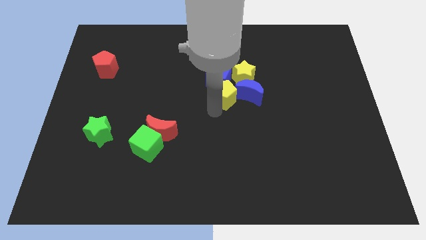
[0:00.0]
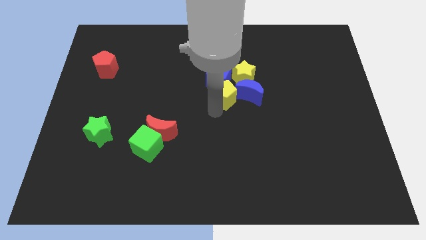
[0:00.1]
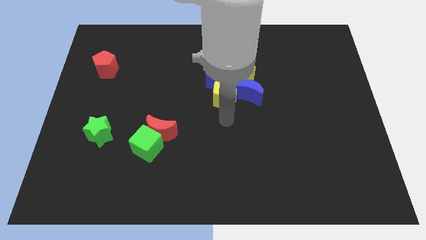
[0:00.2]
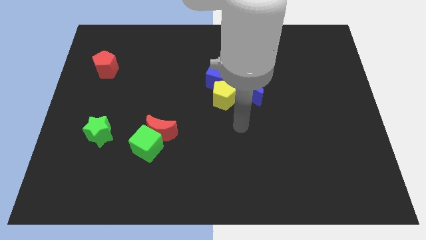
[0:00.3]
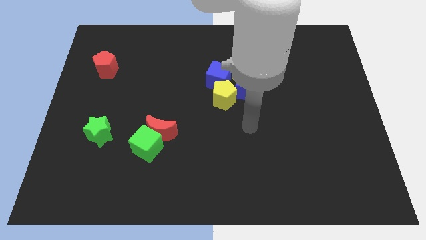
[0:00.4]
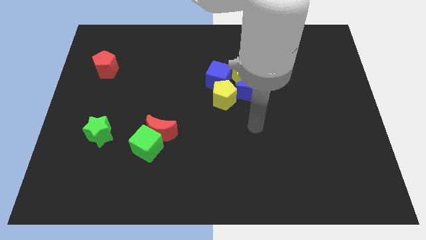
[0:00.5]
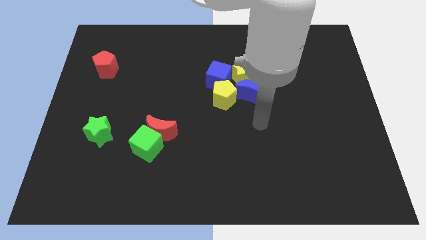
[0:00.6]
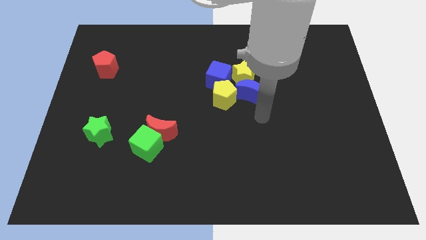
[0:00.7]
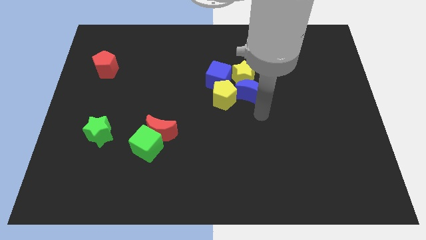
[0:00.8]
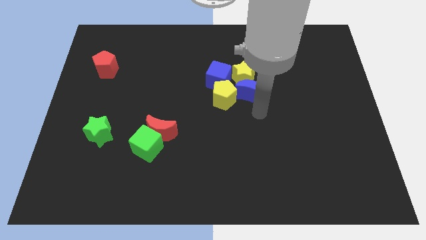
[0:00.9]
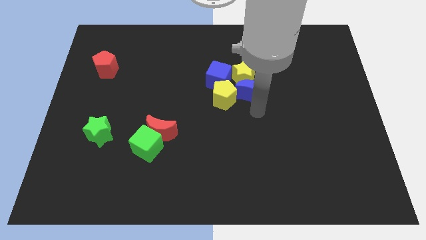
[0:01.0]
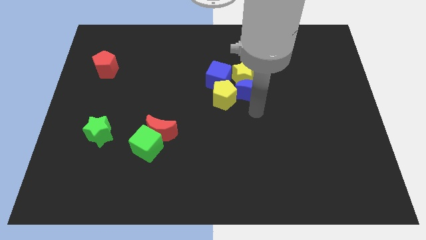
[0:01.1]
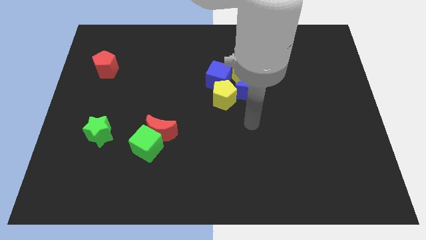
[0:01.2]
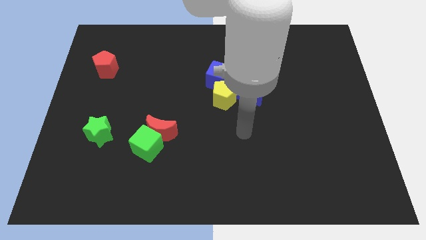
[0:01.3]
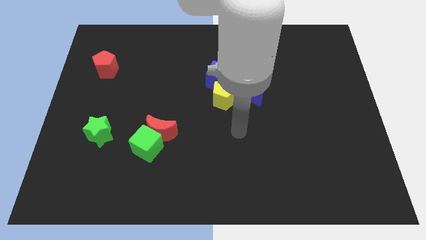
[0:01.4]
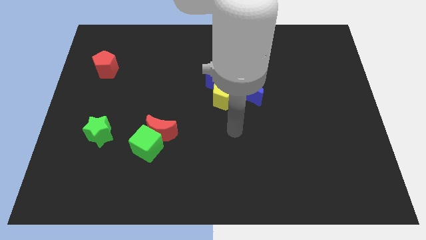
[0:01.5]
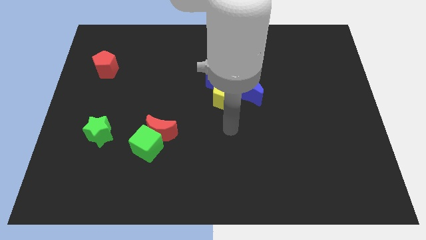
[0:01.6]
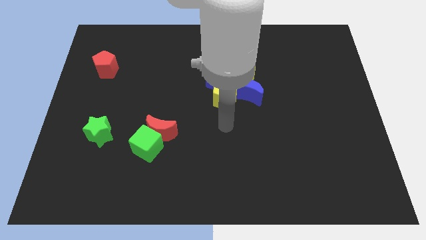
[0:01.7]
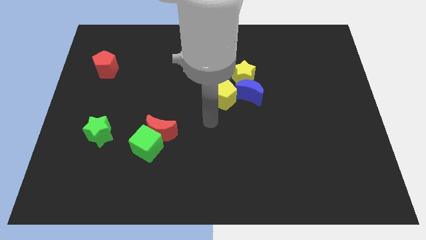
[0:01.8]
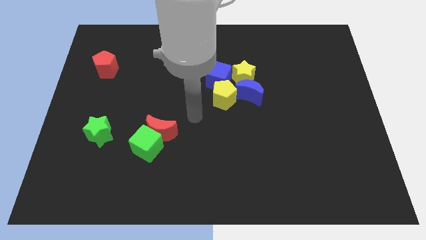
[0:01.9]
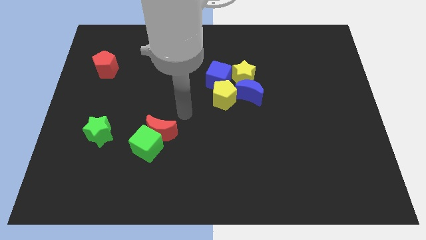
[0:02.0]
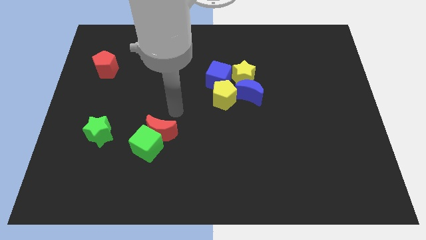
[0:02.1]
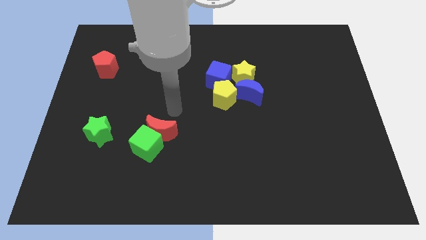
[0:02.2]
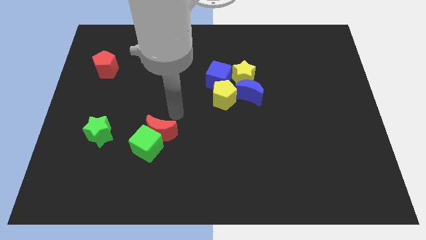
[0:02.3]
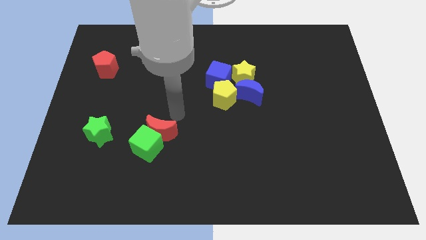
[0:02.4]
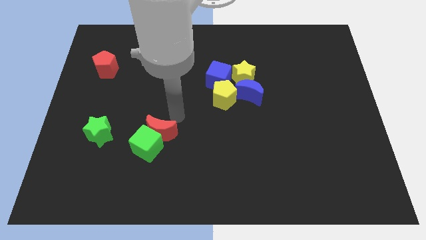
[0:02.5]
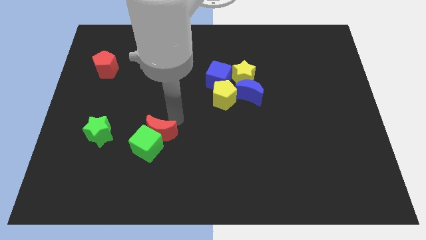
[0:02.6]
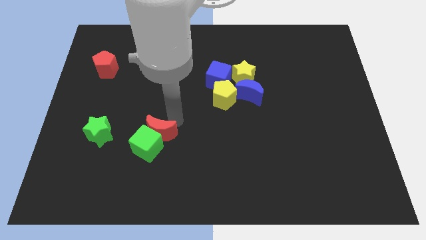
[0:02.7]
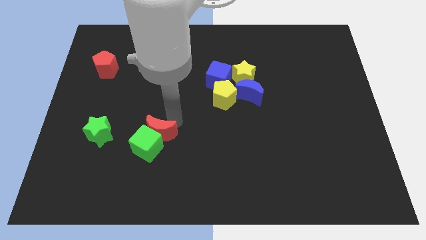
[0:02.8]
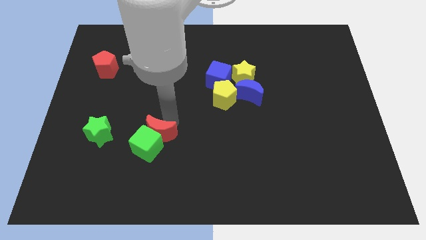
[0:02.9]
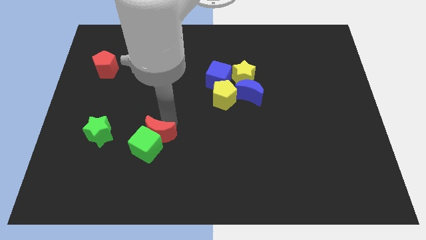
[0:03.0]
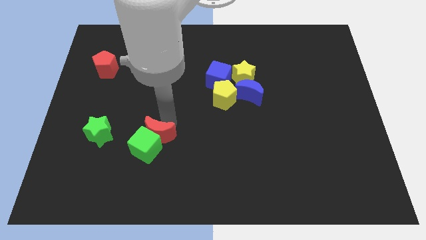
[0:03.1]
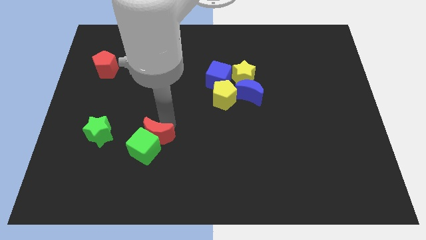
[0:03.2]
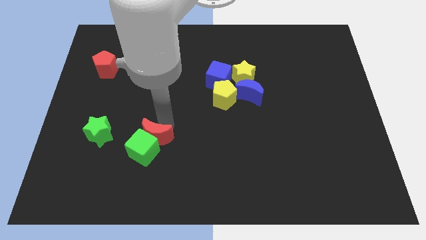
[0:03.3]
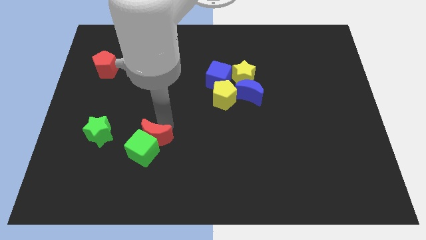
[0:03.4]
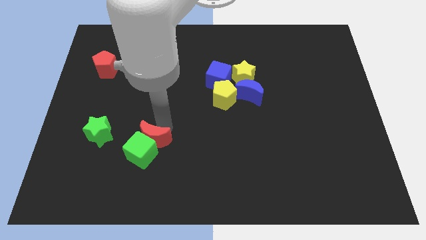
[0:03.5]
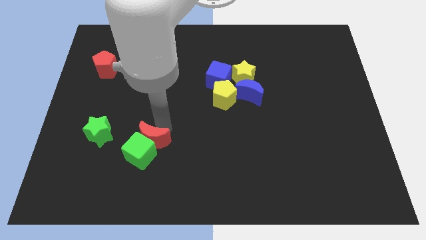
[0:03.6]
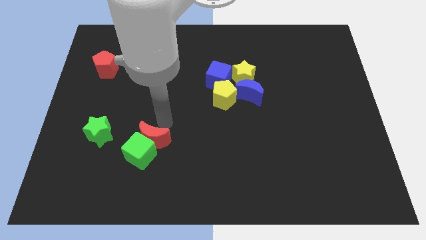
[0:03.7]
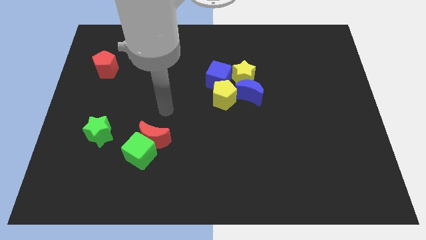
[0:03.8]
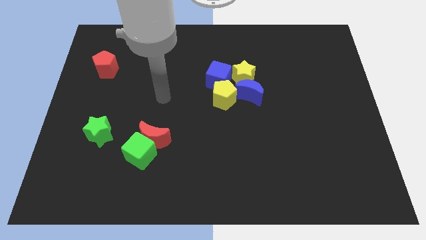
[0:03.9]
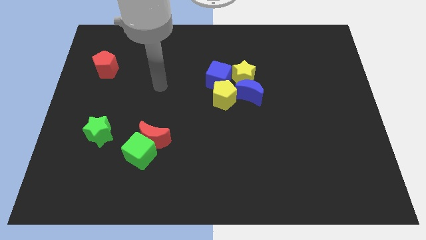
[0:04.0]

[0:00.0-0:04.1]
push the red moon and green cube at the bottom right side of green star

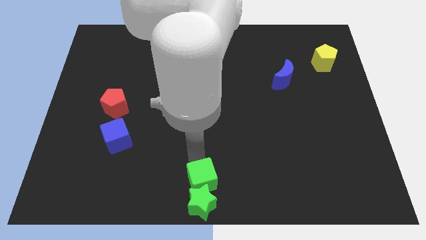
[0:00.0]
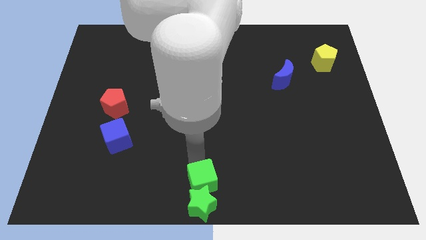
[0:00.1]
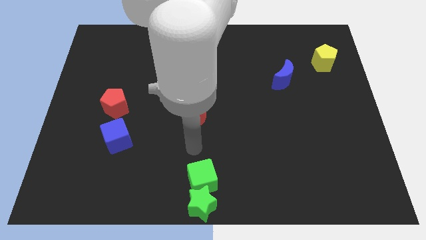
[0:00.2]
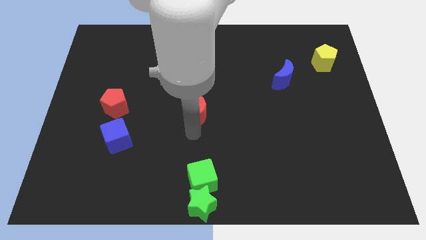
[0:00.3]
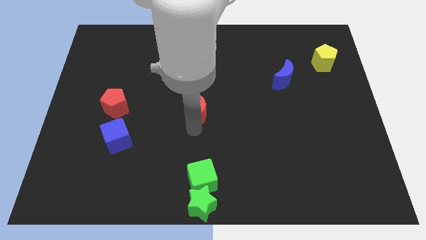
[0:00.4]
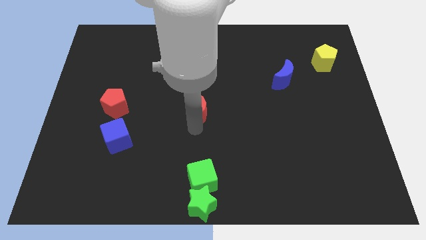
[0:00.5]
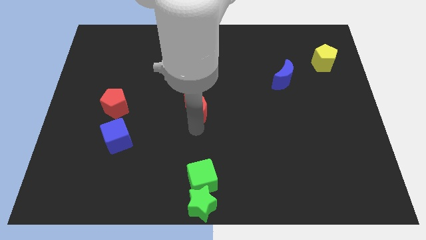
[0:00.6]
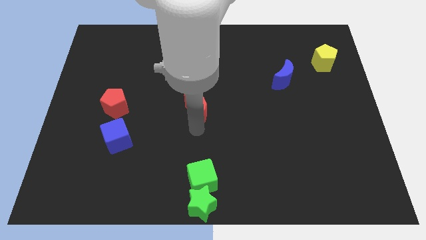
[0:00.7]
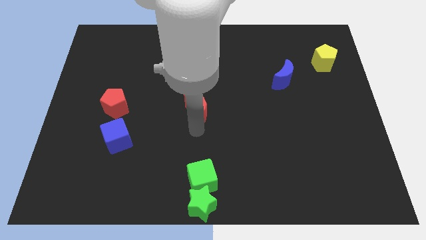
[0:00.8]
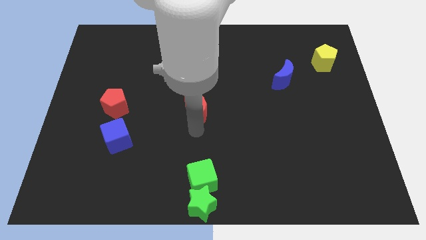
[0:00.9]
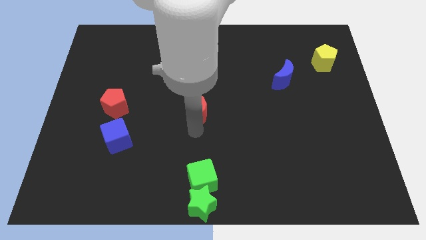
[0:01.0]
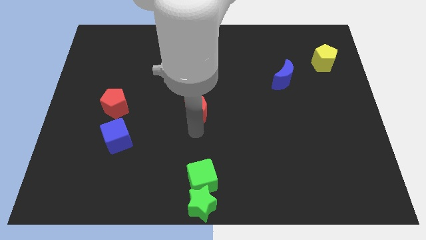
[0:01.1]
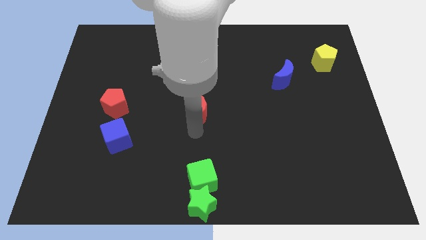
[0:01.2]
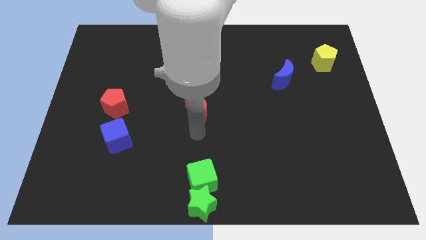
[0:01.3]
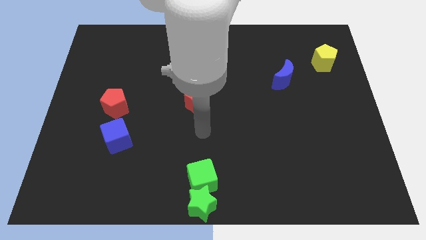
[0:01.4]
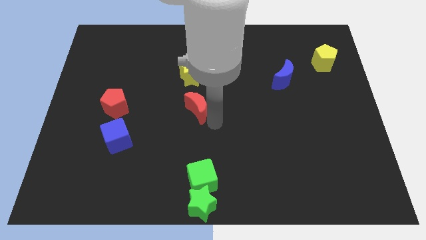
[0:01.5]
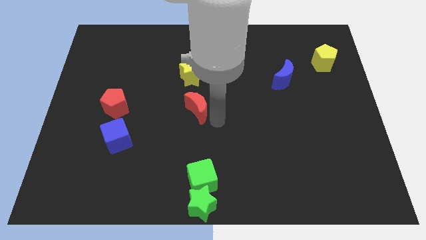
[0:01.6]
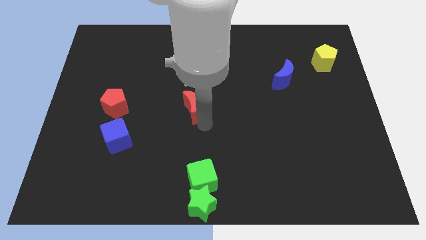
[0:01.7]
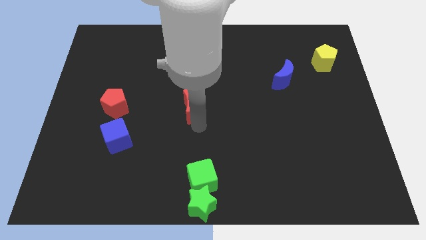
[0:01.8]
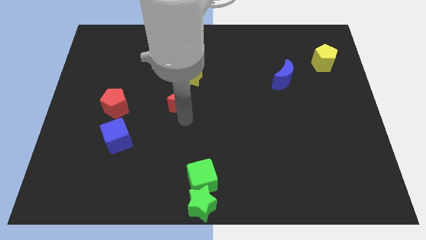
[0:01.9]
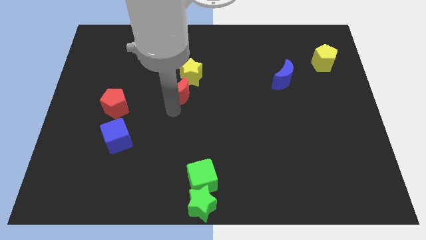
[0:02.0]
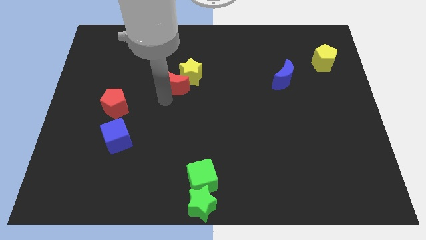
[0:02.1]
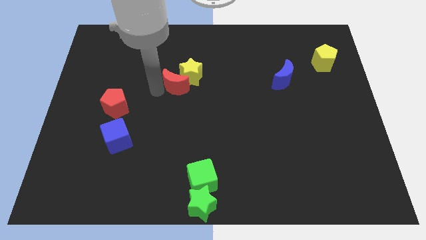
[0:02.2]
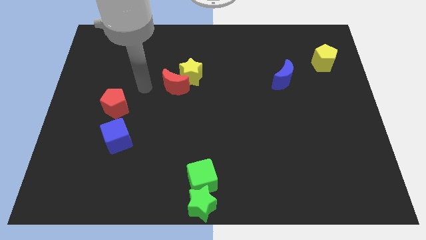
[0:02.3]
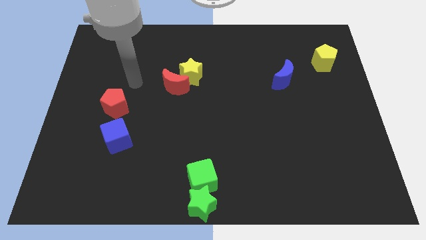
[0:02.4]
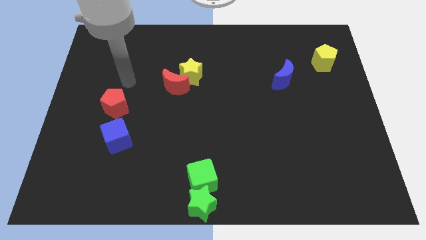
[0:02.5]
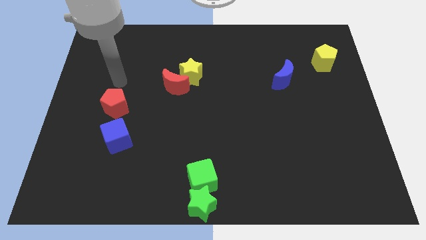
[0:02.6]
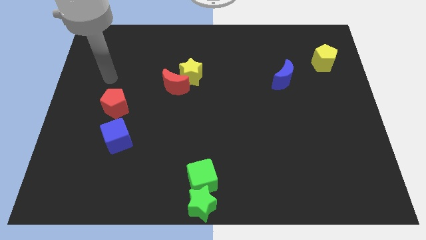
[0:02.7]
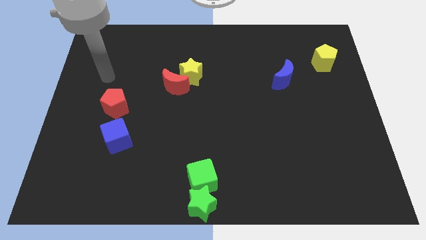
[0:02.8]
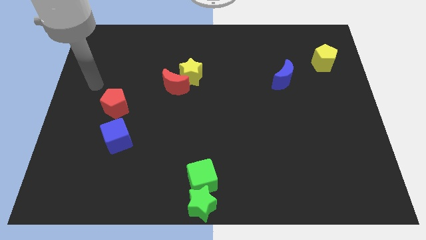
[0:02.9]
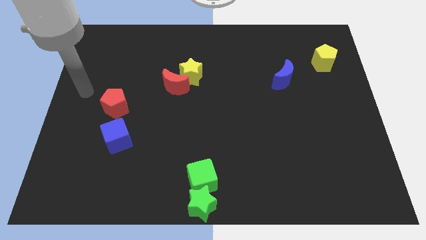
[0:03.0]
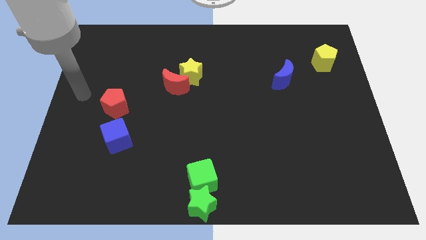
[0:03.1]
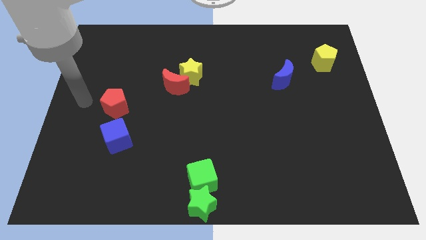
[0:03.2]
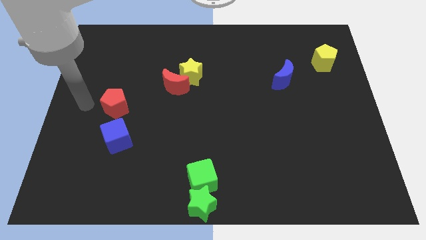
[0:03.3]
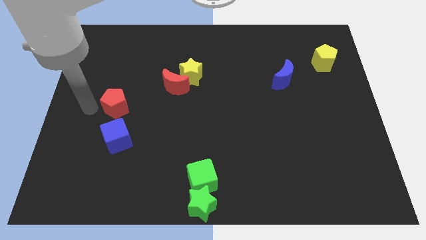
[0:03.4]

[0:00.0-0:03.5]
place the red moon at the bottom left side of yellow star

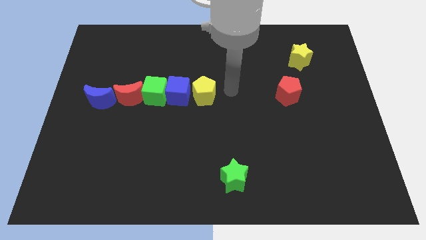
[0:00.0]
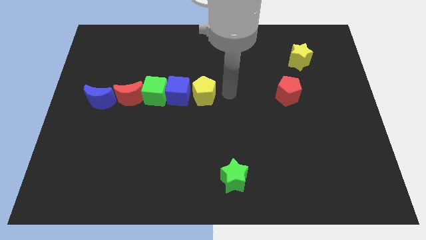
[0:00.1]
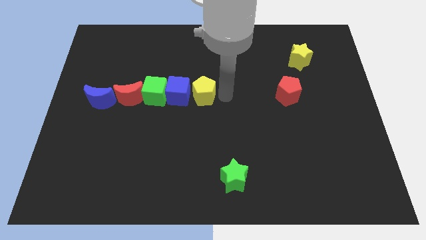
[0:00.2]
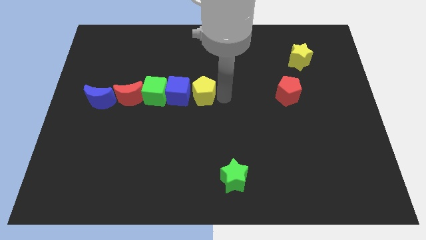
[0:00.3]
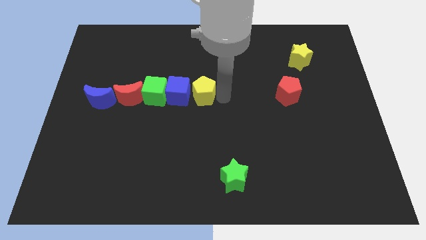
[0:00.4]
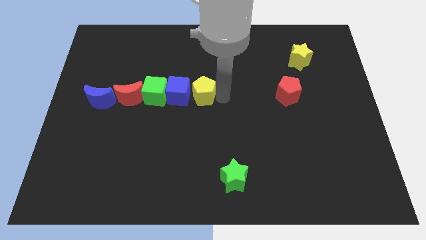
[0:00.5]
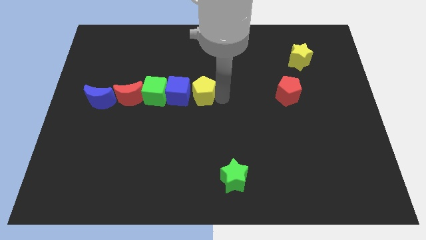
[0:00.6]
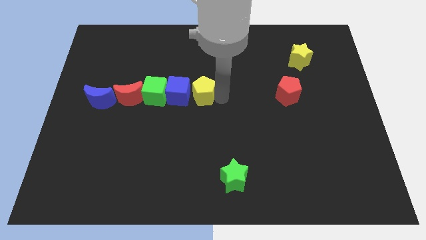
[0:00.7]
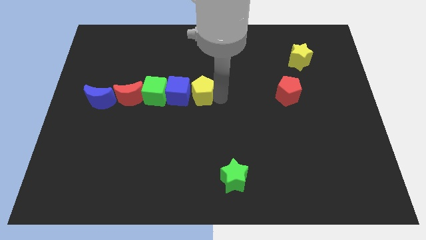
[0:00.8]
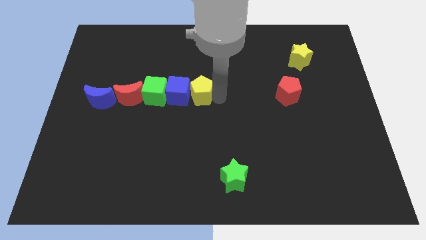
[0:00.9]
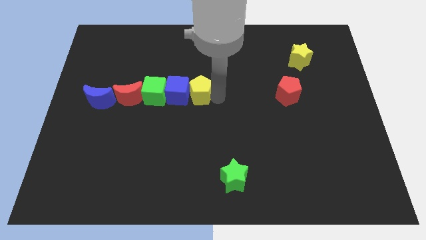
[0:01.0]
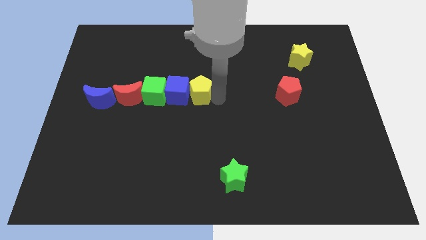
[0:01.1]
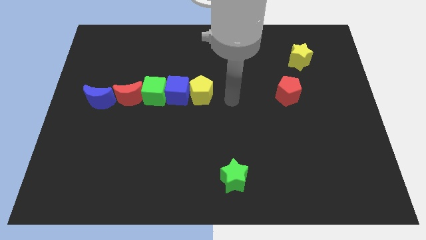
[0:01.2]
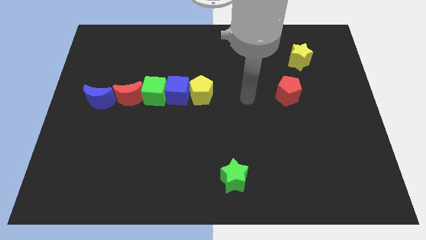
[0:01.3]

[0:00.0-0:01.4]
push the yellow pentagon into the blue cube

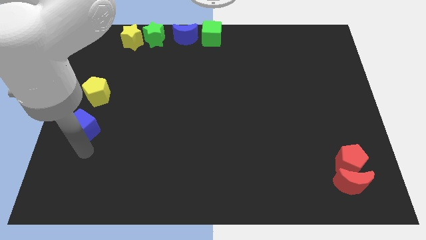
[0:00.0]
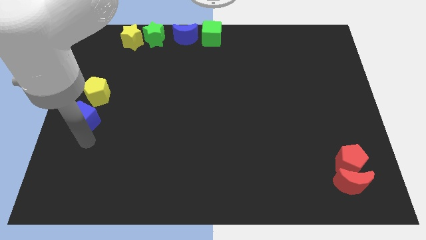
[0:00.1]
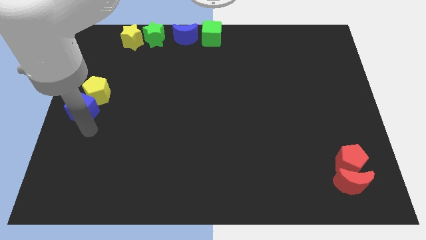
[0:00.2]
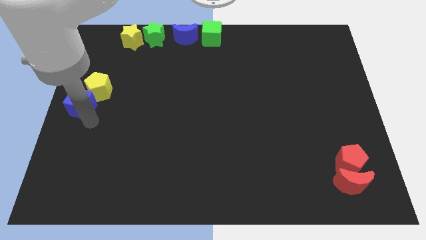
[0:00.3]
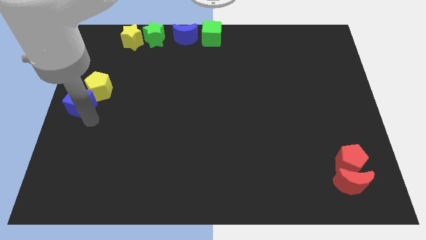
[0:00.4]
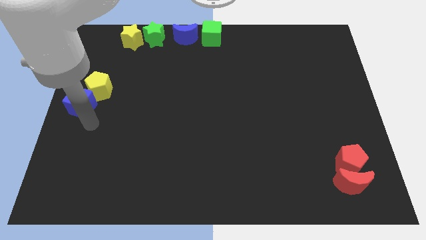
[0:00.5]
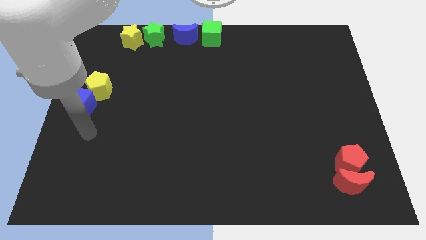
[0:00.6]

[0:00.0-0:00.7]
push the blue cube into the yellow pentagon
